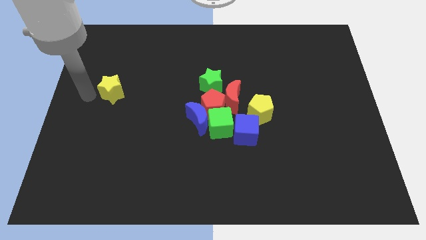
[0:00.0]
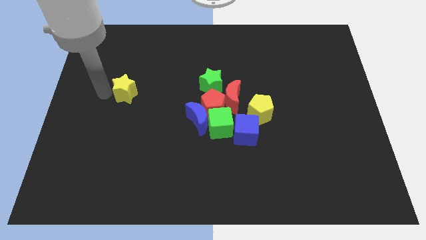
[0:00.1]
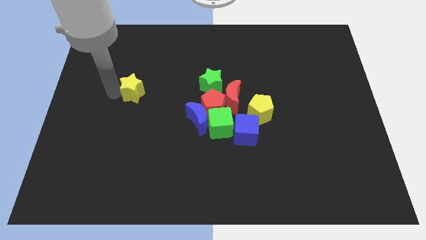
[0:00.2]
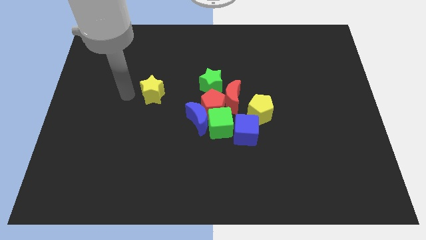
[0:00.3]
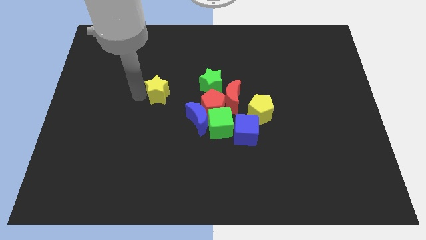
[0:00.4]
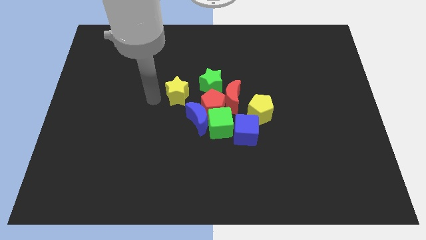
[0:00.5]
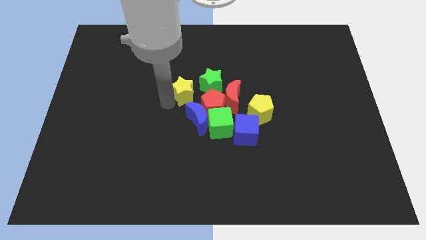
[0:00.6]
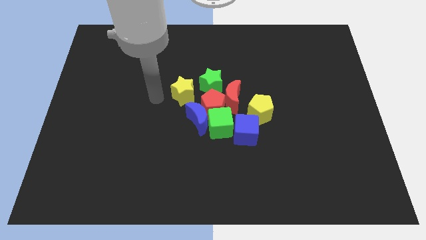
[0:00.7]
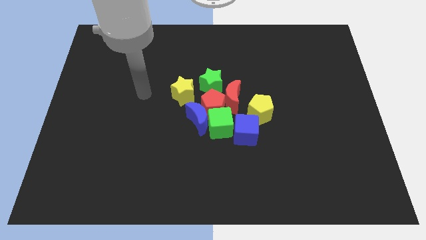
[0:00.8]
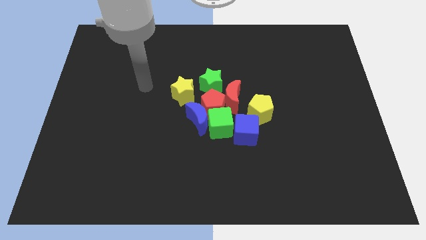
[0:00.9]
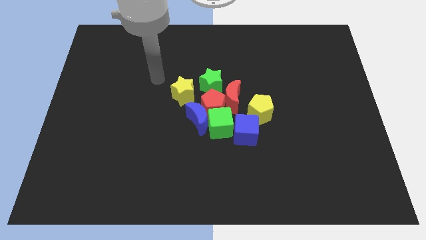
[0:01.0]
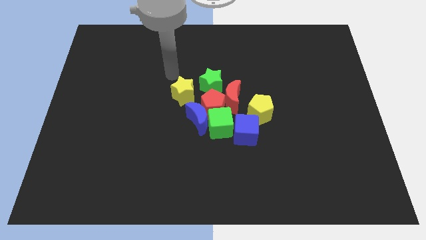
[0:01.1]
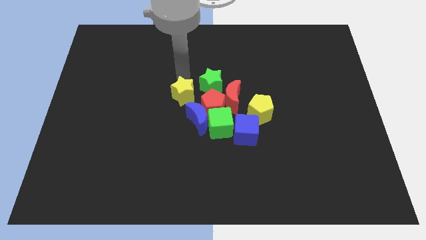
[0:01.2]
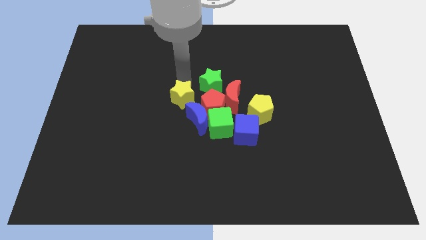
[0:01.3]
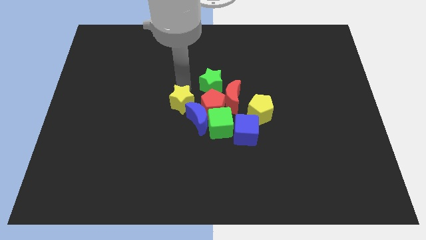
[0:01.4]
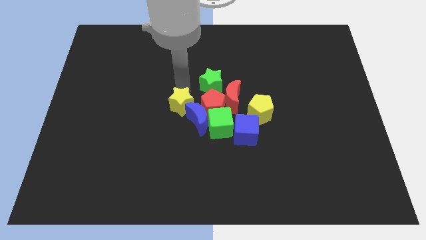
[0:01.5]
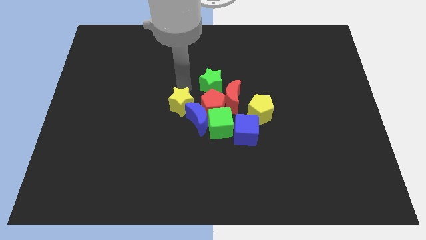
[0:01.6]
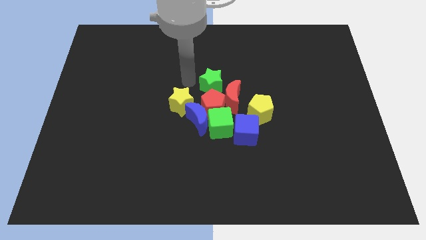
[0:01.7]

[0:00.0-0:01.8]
move the yellow star to the top of the blue crescent

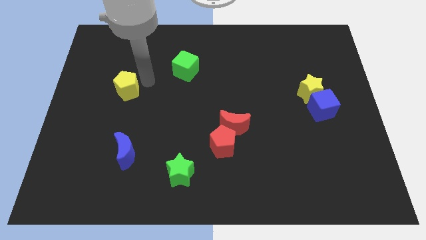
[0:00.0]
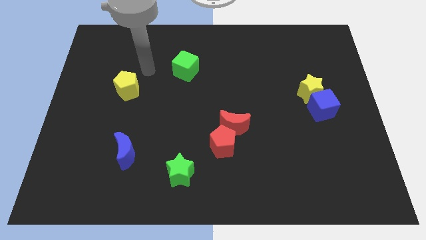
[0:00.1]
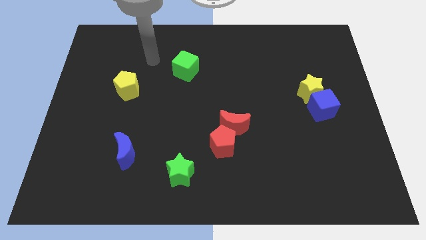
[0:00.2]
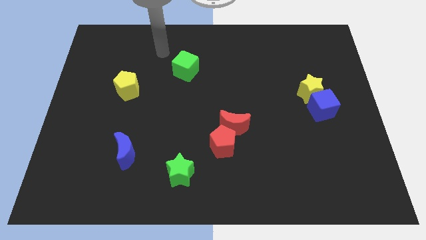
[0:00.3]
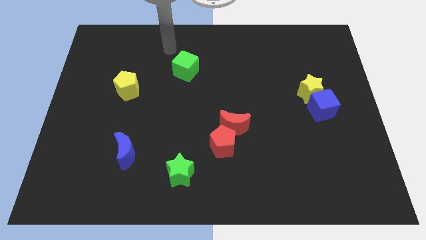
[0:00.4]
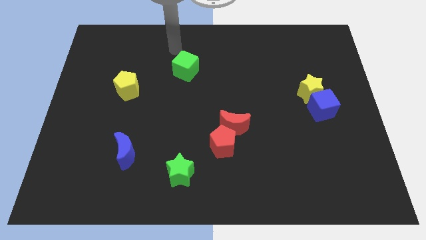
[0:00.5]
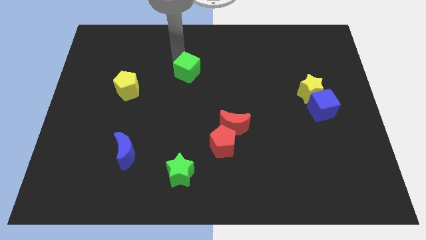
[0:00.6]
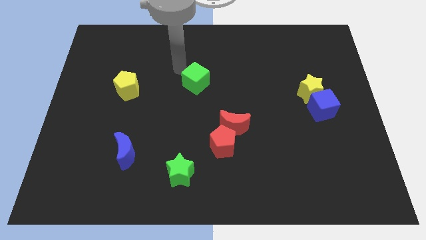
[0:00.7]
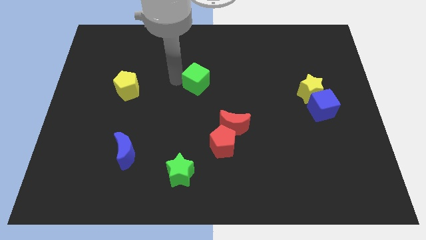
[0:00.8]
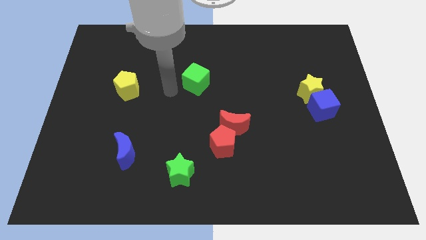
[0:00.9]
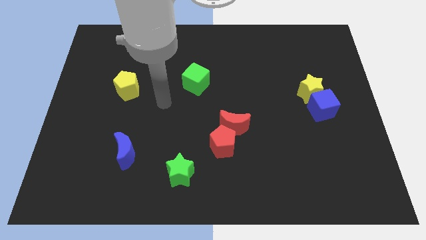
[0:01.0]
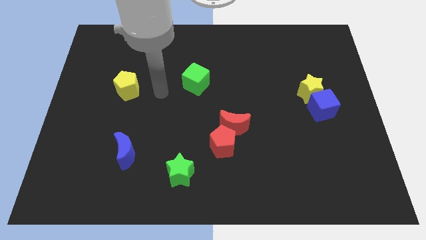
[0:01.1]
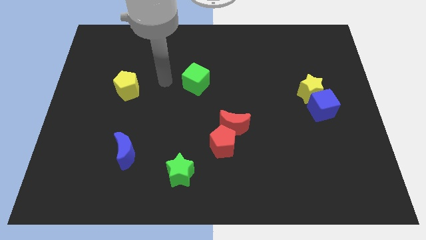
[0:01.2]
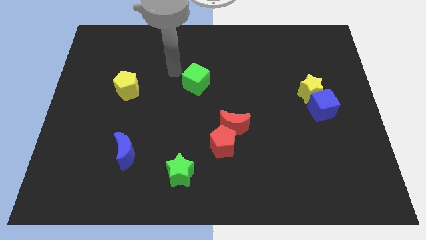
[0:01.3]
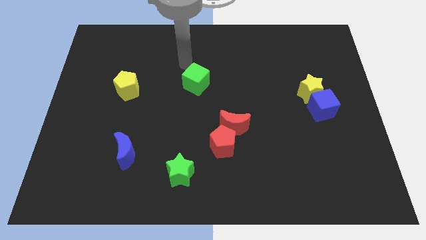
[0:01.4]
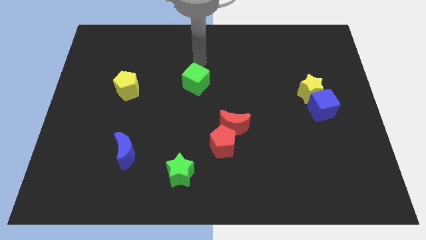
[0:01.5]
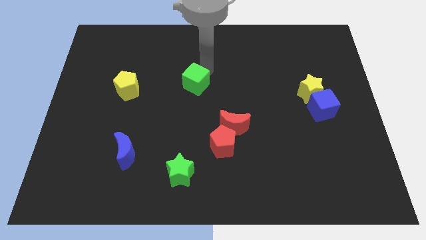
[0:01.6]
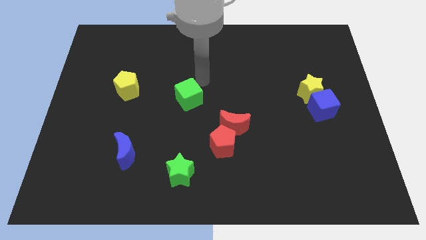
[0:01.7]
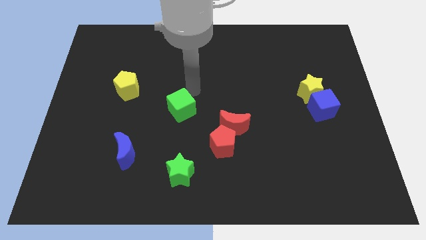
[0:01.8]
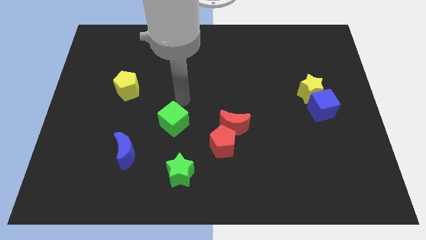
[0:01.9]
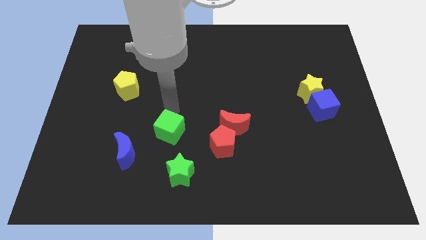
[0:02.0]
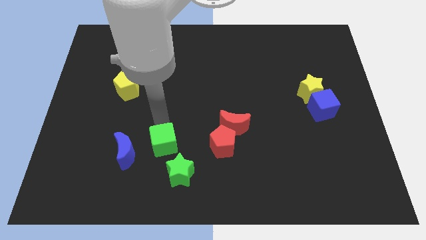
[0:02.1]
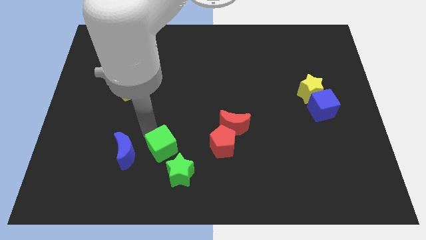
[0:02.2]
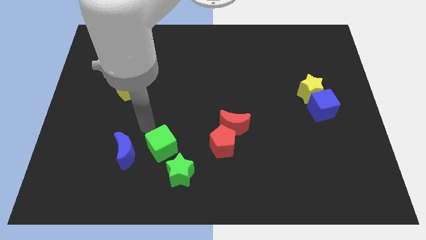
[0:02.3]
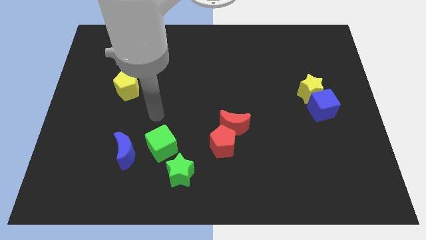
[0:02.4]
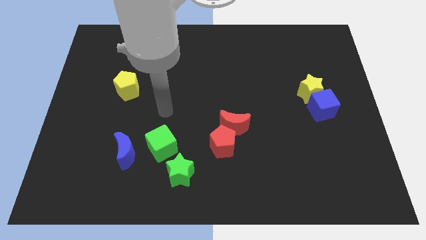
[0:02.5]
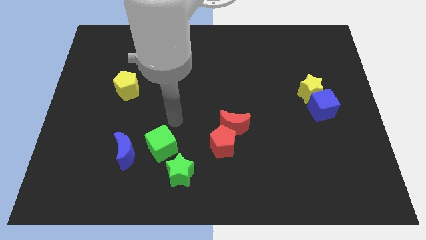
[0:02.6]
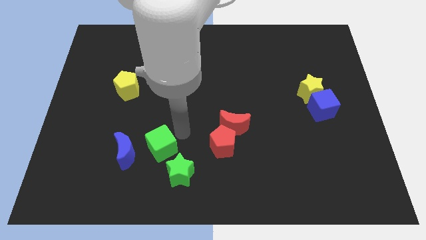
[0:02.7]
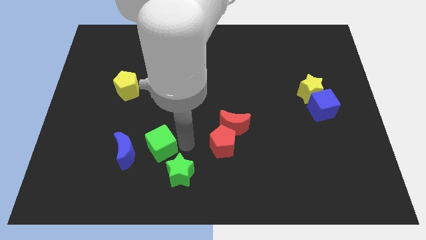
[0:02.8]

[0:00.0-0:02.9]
place the green cube to the right of the blue moon

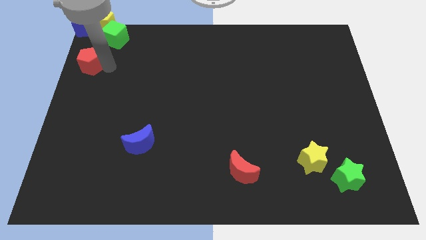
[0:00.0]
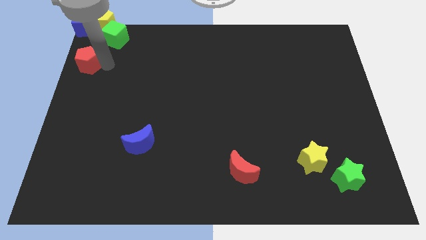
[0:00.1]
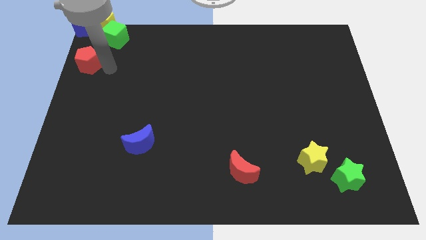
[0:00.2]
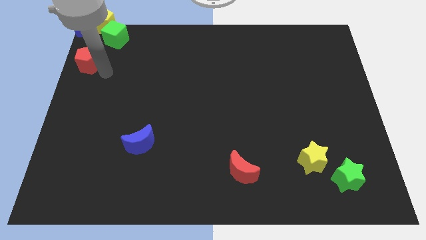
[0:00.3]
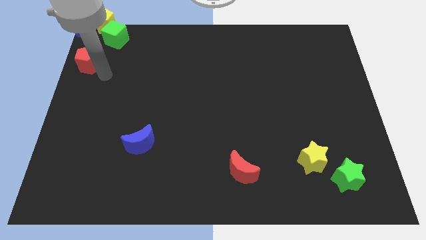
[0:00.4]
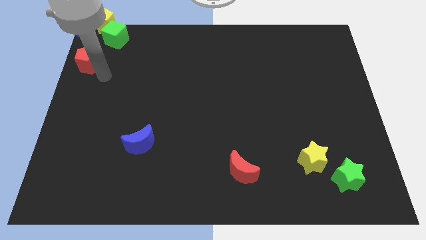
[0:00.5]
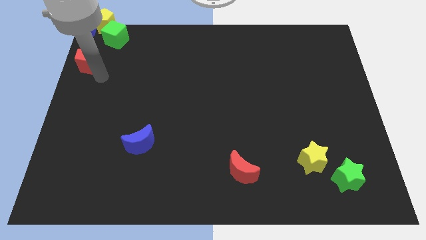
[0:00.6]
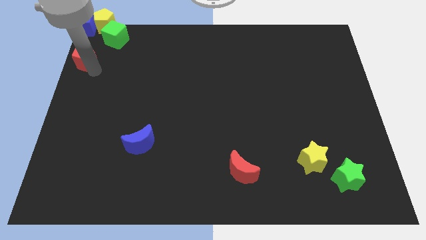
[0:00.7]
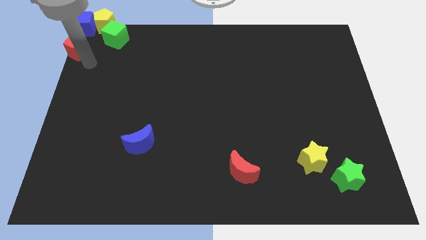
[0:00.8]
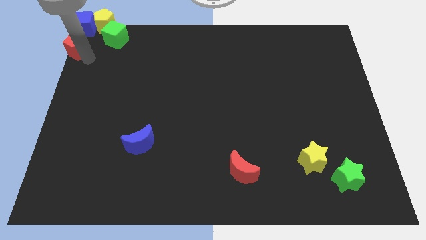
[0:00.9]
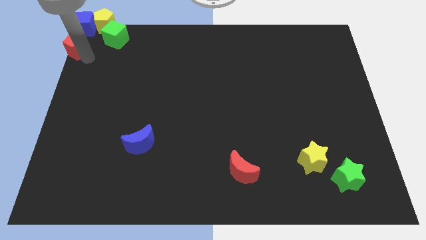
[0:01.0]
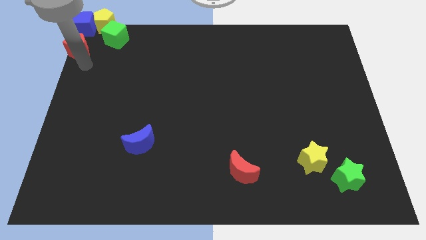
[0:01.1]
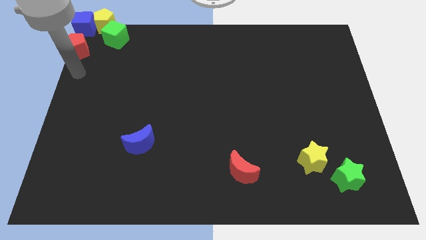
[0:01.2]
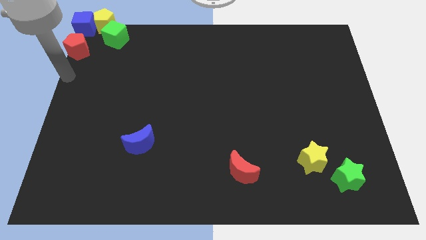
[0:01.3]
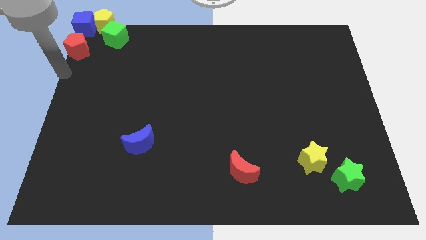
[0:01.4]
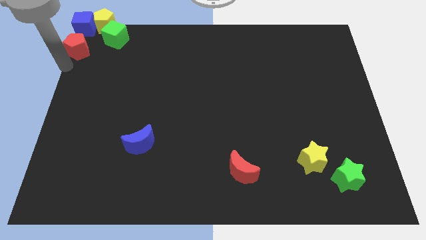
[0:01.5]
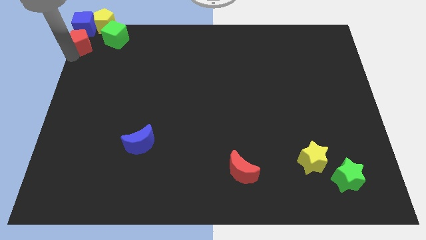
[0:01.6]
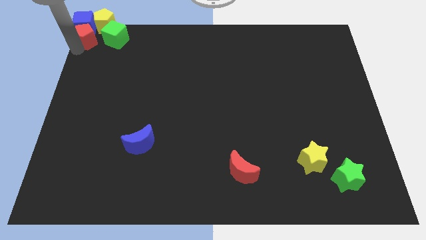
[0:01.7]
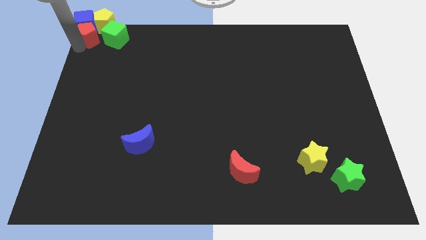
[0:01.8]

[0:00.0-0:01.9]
push the red pentagon into the bottom side of the blue cube

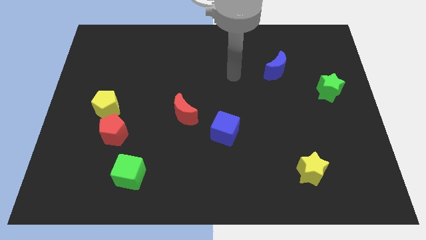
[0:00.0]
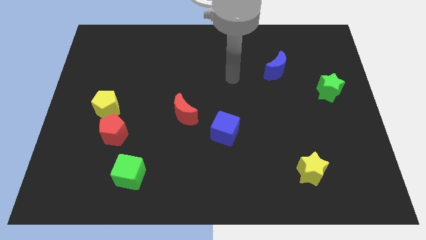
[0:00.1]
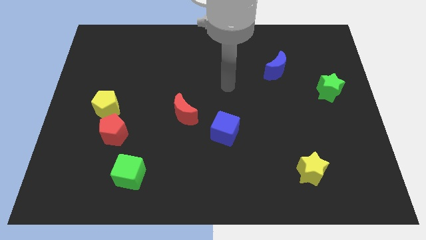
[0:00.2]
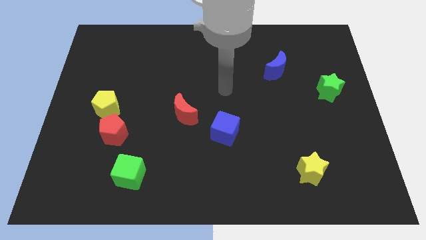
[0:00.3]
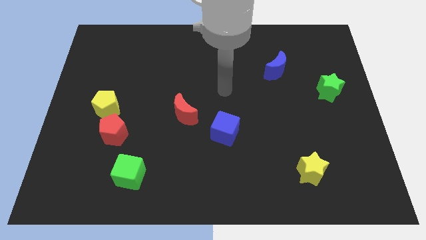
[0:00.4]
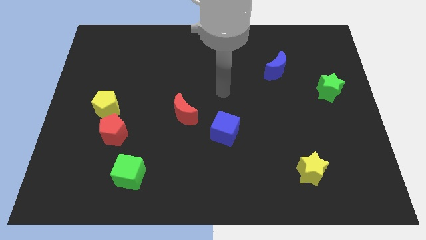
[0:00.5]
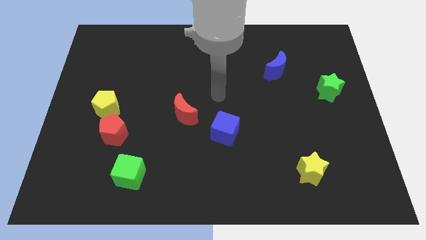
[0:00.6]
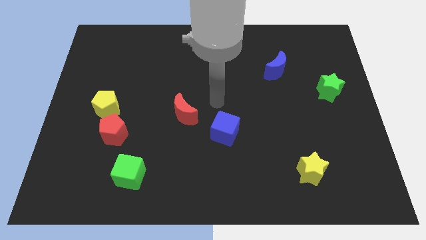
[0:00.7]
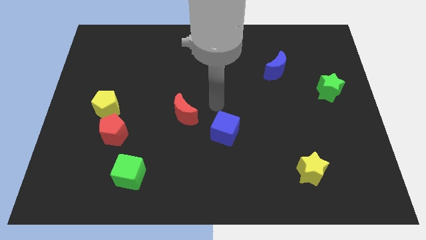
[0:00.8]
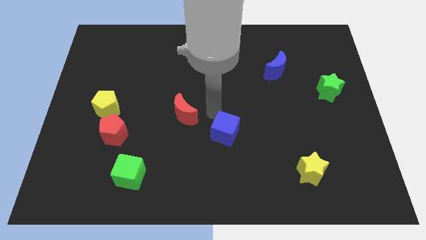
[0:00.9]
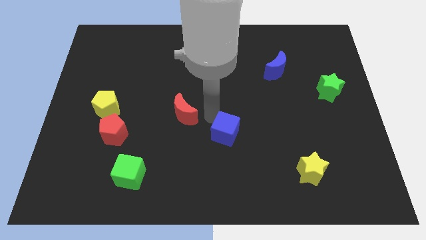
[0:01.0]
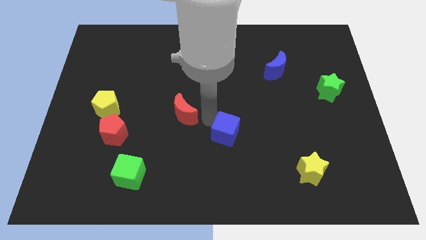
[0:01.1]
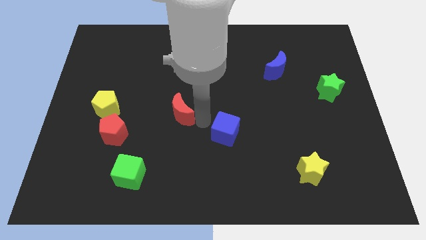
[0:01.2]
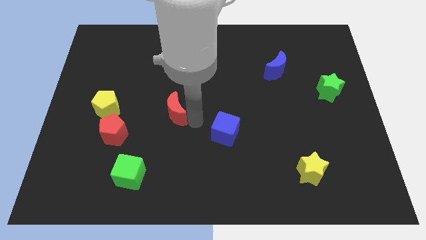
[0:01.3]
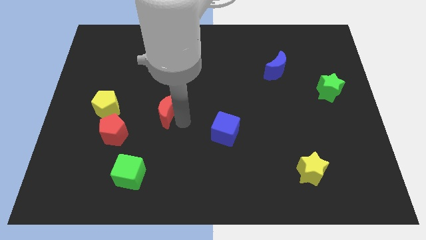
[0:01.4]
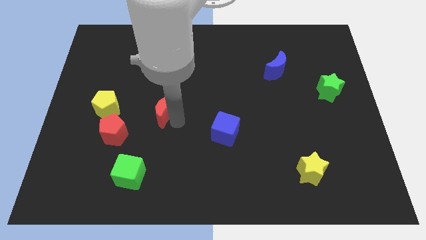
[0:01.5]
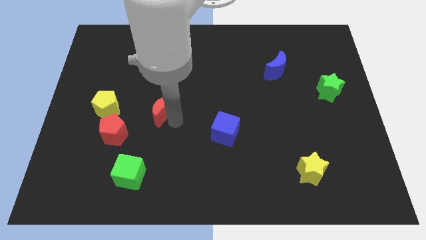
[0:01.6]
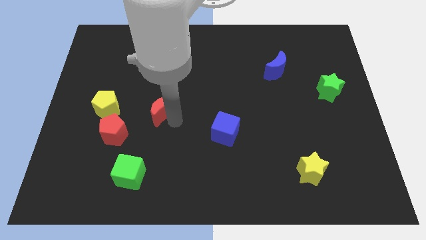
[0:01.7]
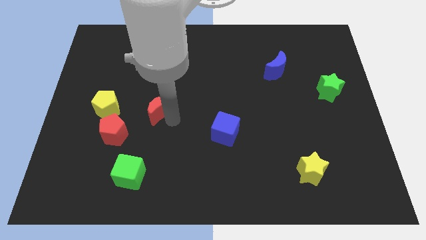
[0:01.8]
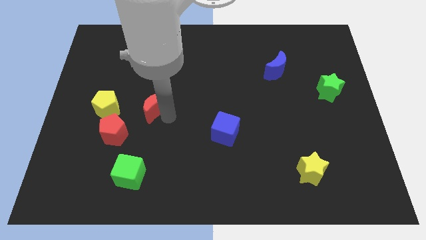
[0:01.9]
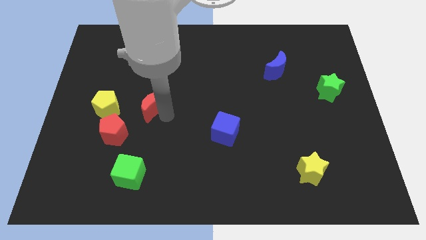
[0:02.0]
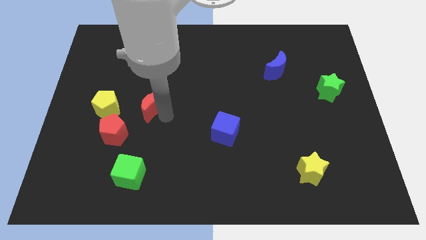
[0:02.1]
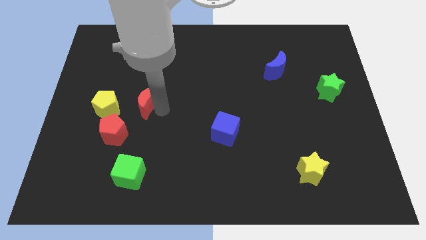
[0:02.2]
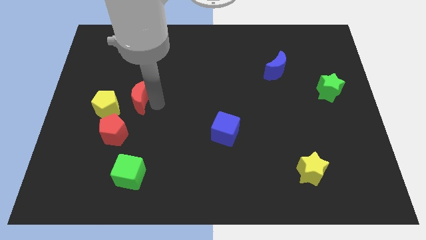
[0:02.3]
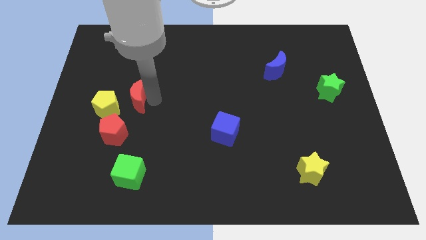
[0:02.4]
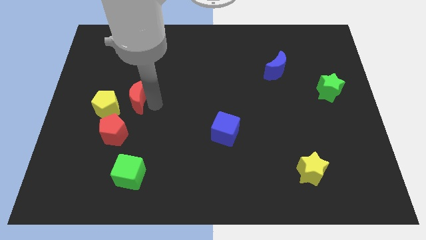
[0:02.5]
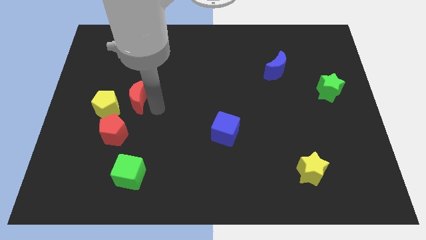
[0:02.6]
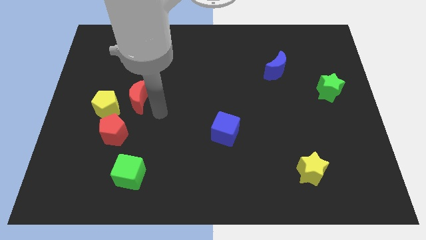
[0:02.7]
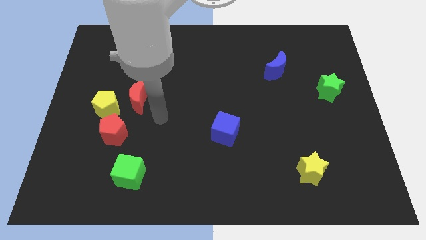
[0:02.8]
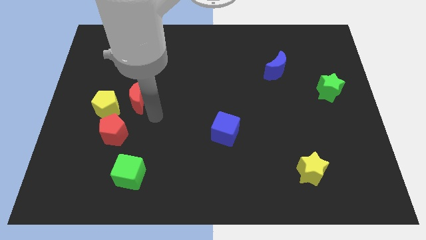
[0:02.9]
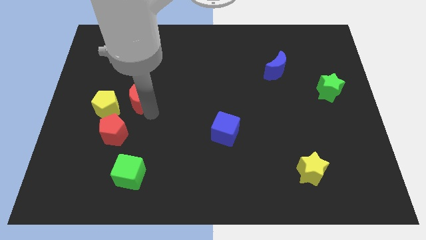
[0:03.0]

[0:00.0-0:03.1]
move red crescent towards the right of the yellow pentagon
